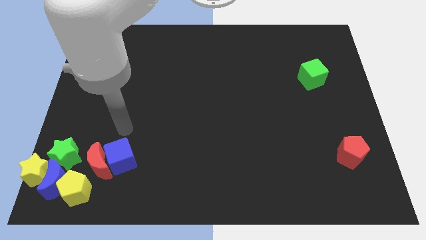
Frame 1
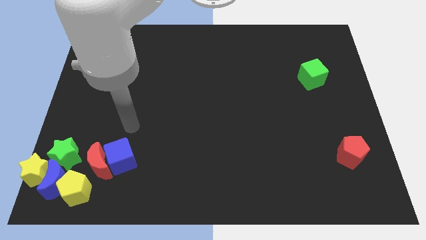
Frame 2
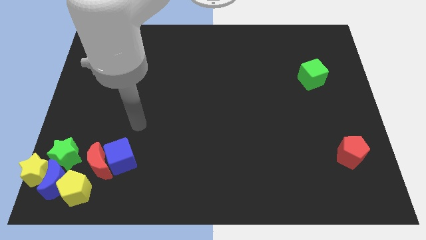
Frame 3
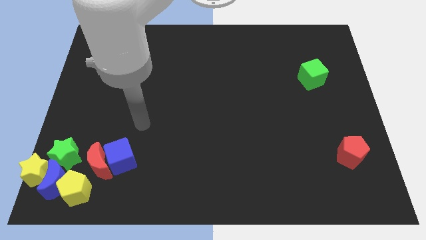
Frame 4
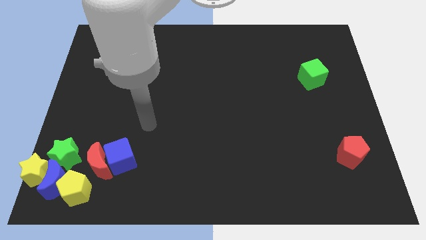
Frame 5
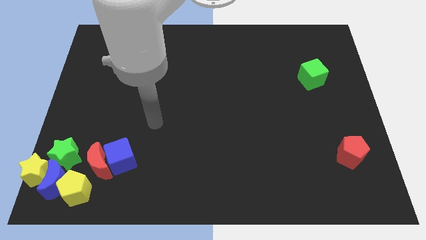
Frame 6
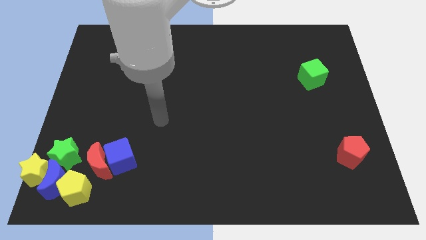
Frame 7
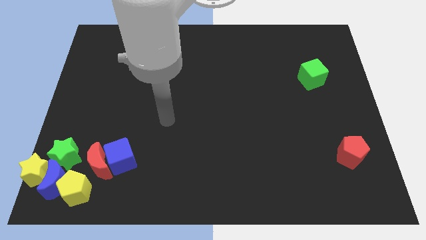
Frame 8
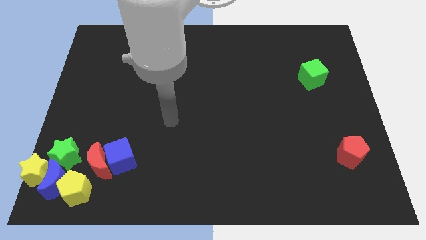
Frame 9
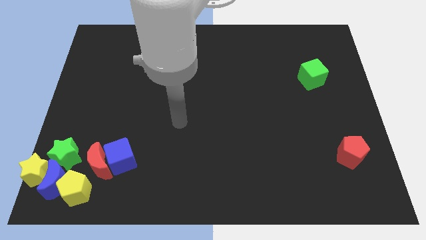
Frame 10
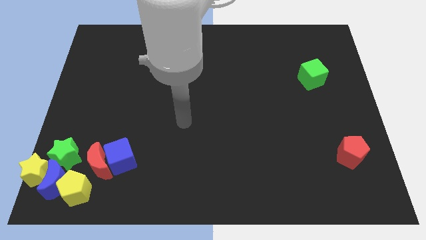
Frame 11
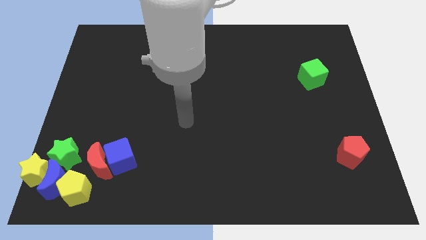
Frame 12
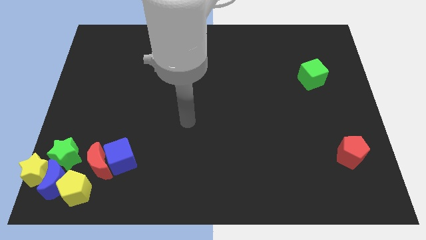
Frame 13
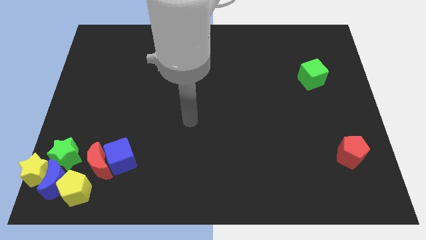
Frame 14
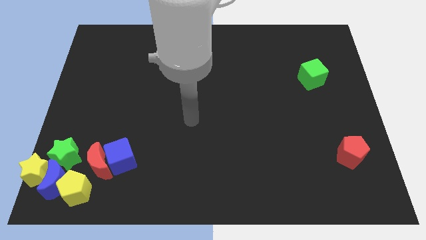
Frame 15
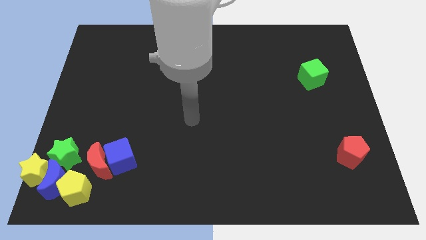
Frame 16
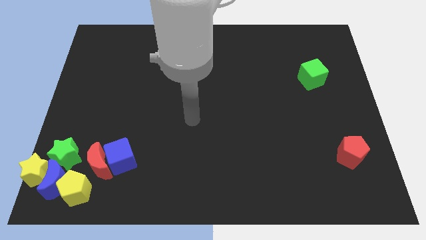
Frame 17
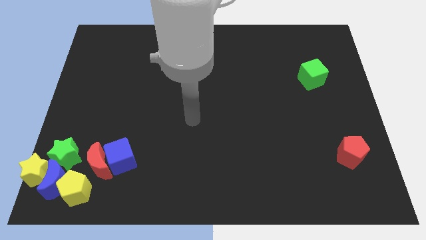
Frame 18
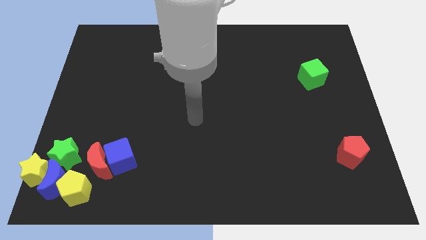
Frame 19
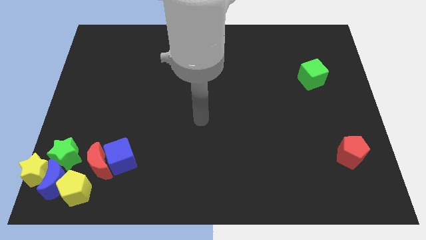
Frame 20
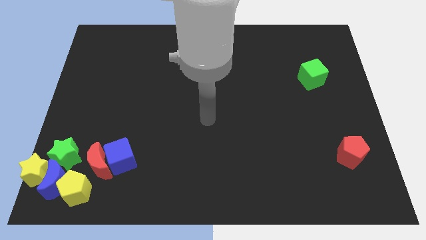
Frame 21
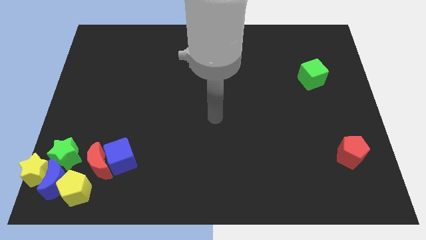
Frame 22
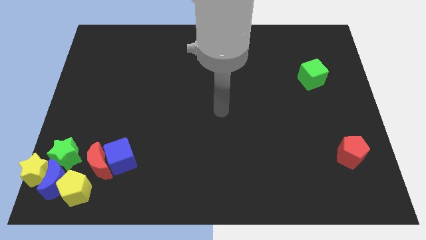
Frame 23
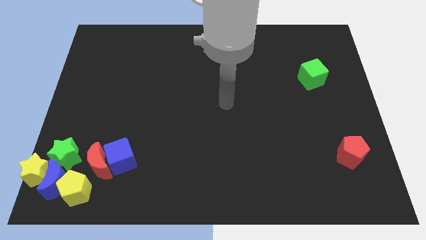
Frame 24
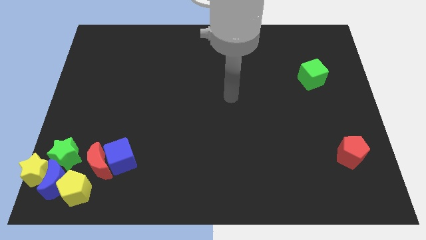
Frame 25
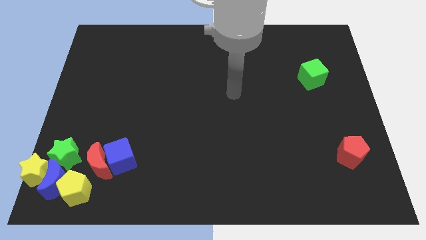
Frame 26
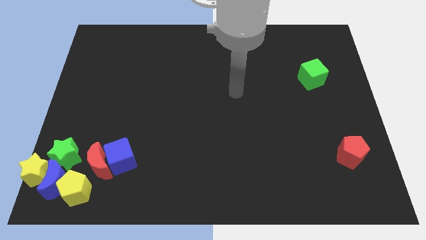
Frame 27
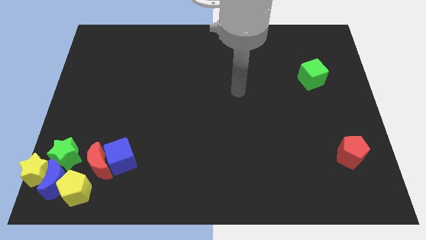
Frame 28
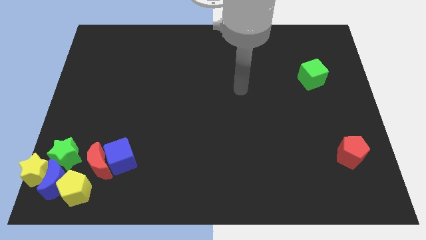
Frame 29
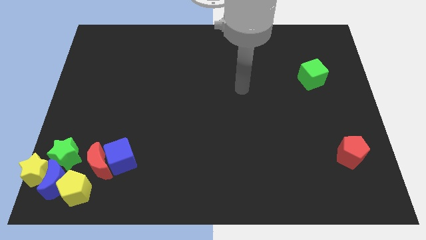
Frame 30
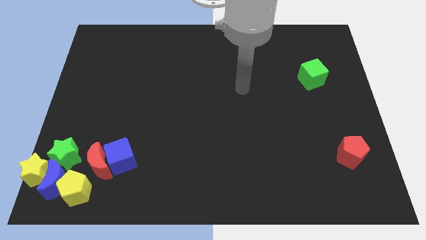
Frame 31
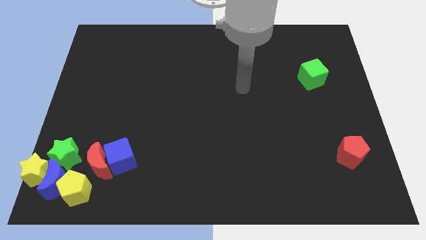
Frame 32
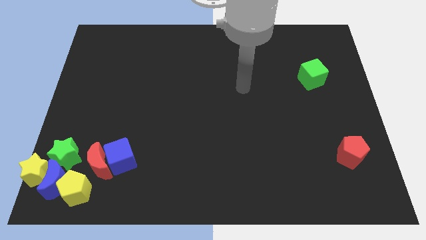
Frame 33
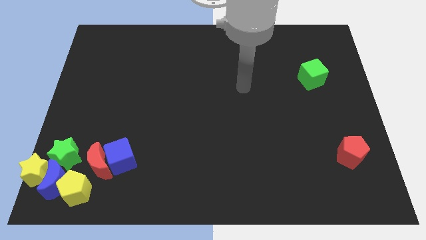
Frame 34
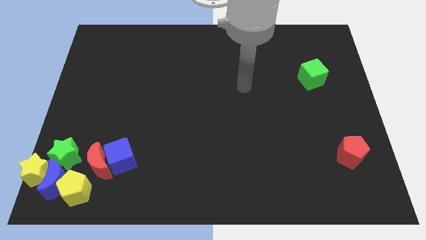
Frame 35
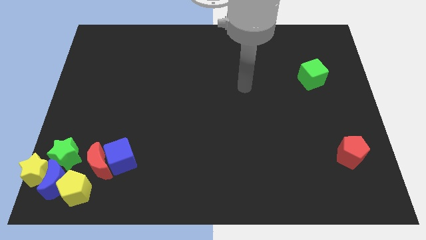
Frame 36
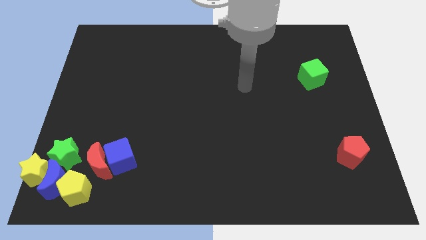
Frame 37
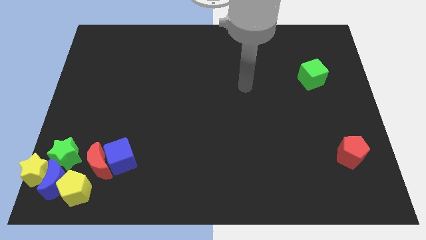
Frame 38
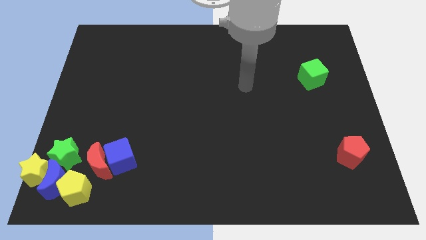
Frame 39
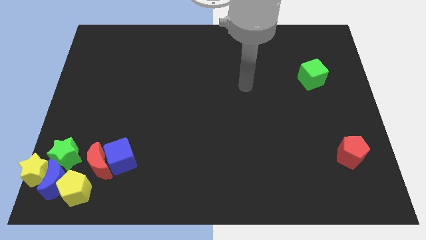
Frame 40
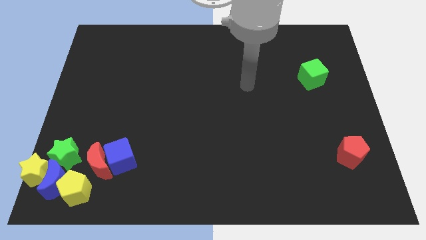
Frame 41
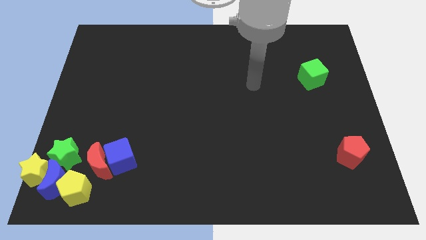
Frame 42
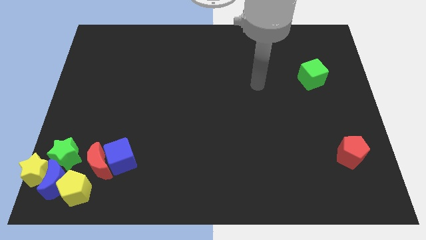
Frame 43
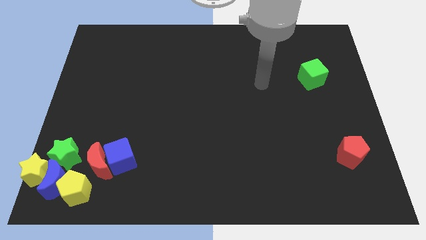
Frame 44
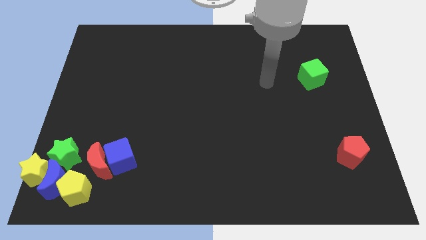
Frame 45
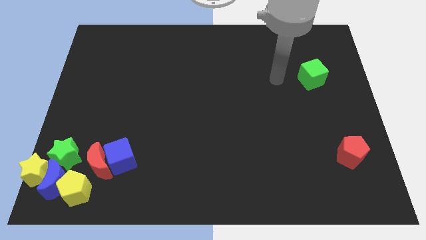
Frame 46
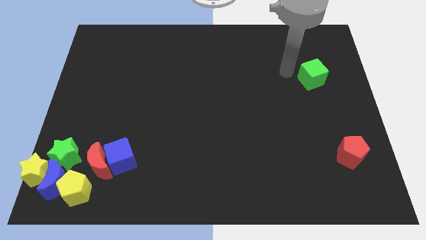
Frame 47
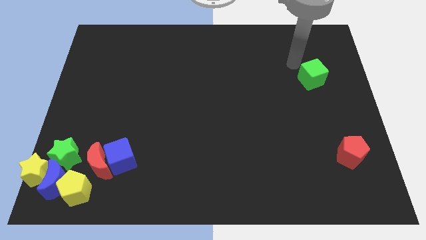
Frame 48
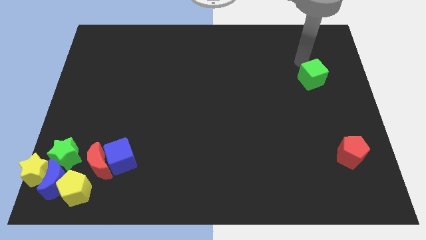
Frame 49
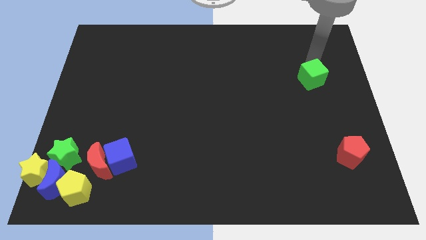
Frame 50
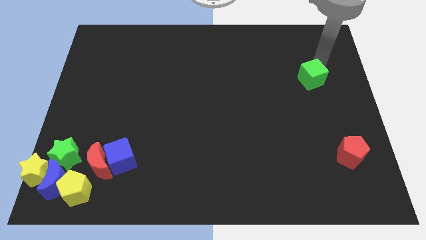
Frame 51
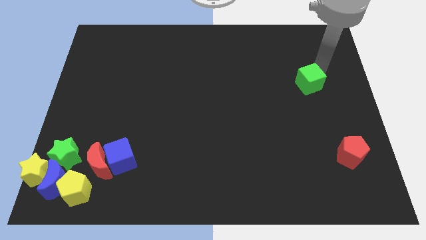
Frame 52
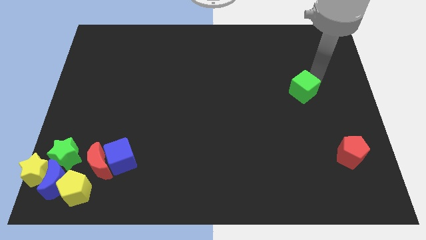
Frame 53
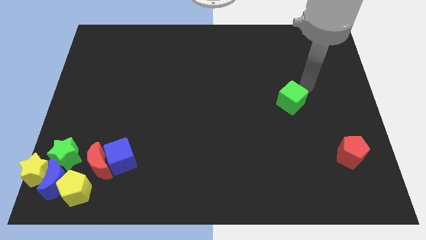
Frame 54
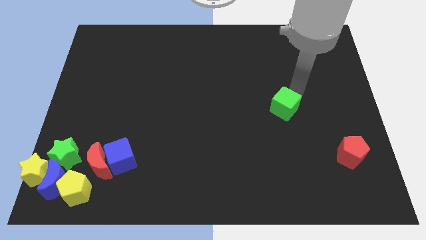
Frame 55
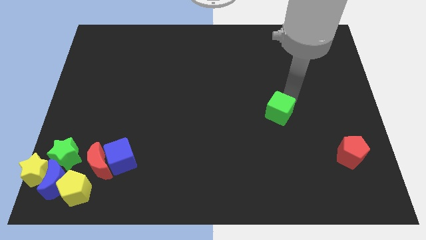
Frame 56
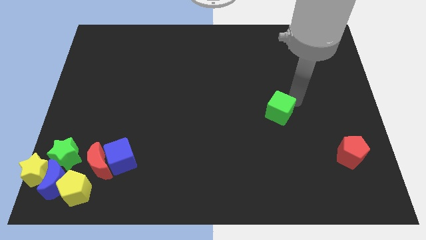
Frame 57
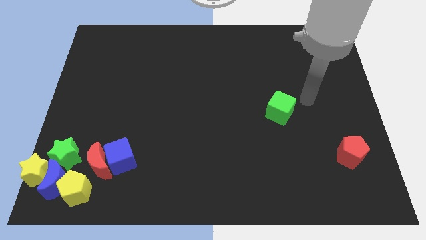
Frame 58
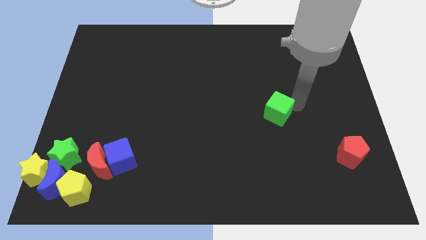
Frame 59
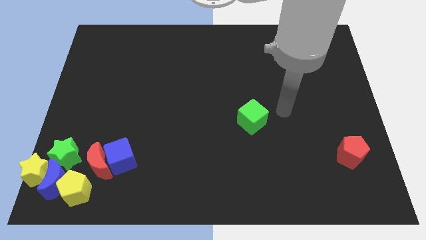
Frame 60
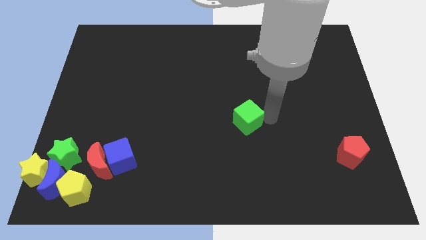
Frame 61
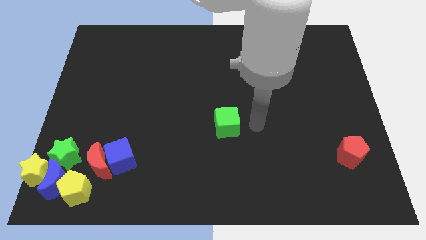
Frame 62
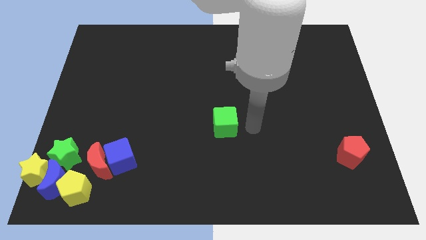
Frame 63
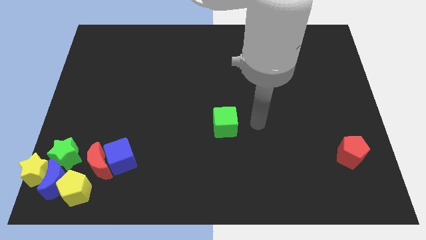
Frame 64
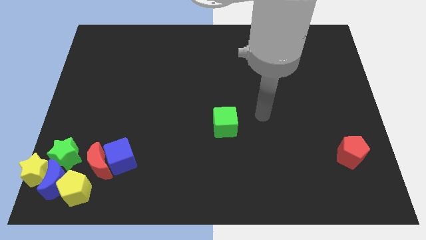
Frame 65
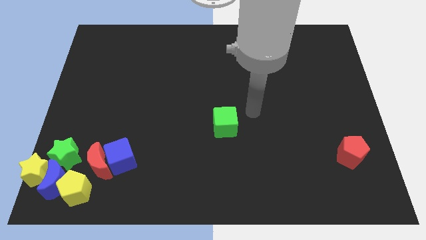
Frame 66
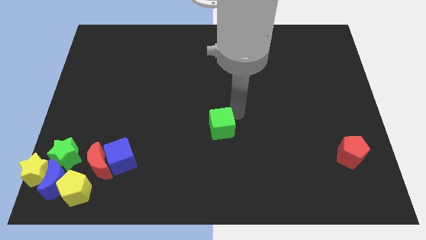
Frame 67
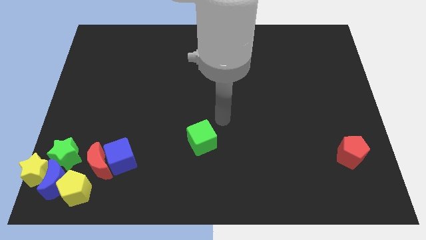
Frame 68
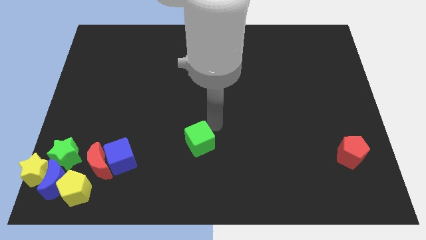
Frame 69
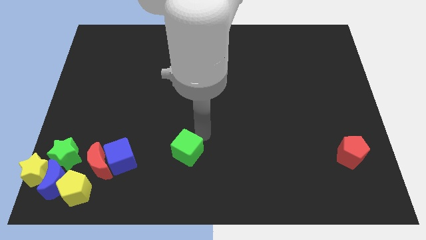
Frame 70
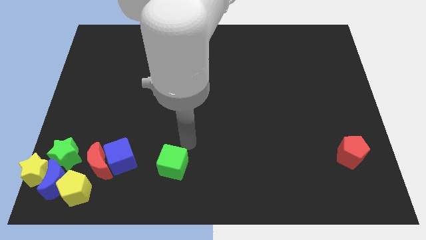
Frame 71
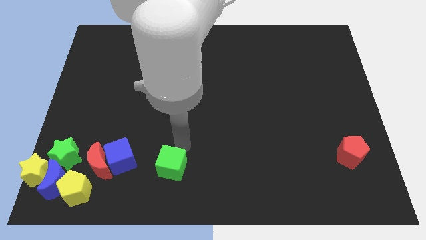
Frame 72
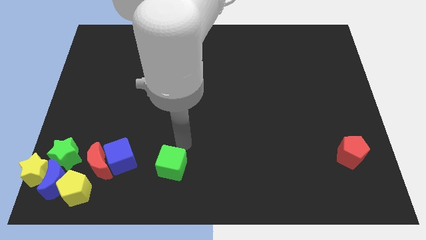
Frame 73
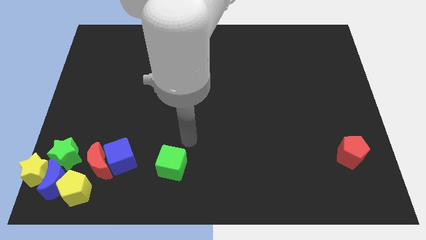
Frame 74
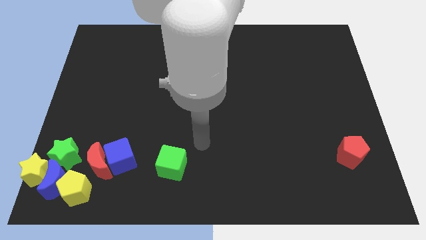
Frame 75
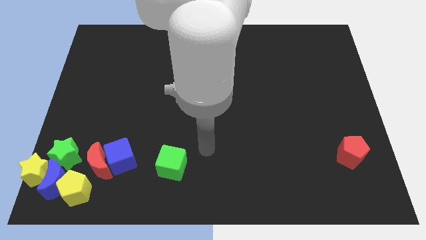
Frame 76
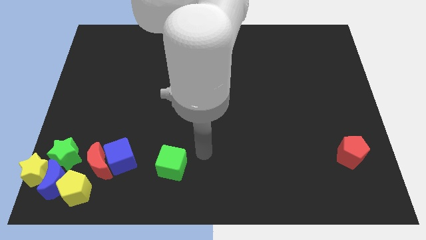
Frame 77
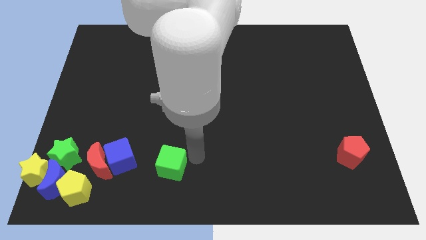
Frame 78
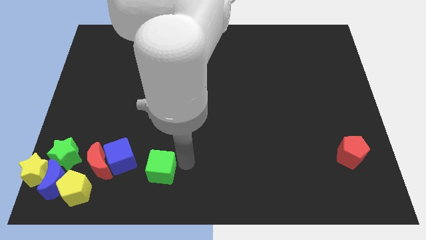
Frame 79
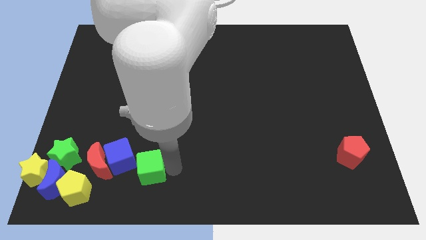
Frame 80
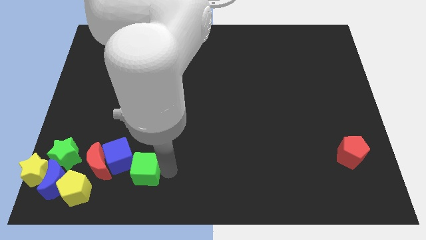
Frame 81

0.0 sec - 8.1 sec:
move the green cube to the left bottom

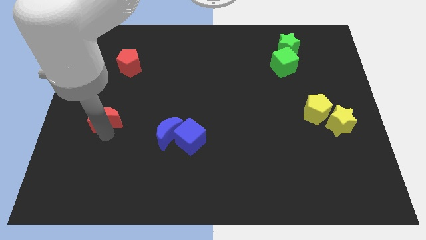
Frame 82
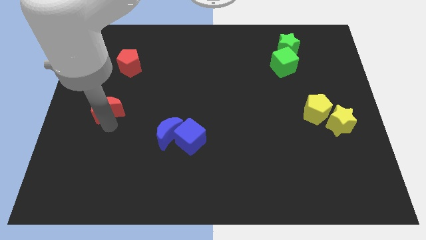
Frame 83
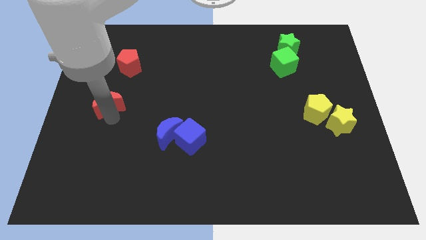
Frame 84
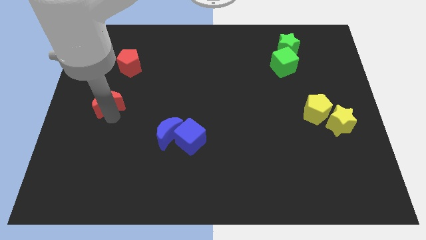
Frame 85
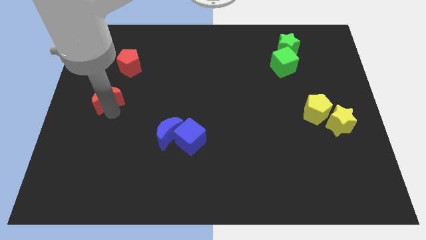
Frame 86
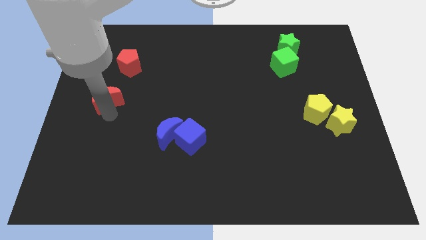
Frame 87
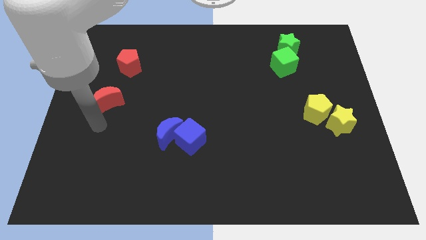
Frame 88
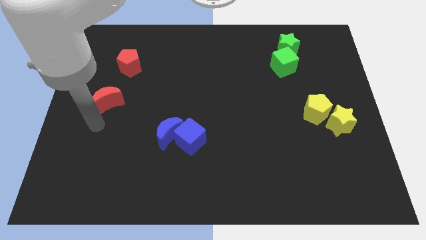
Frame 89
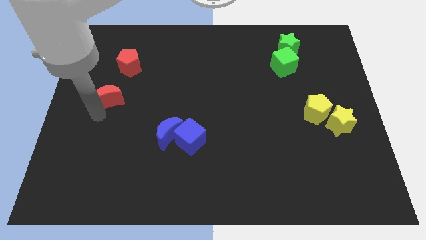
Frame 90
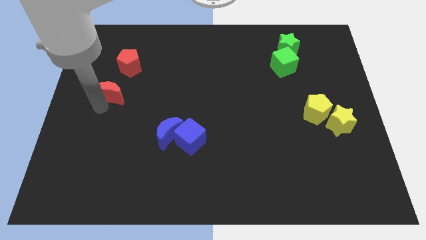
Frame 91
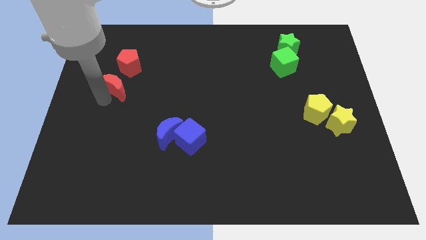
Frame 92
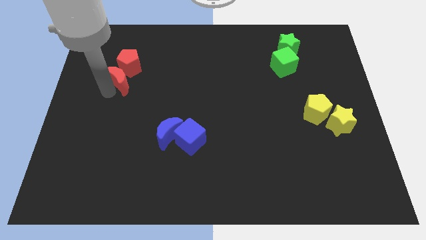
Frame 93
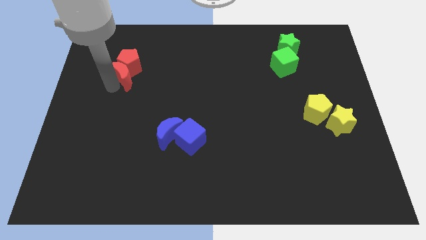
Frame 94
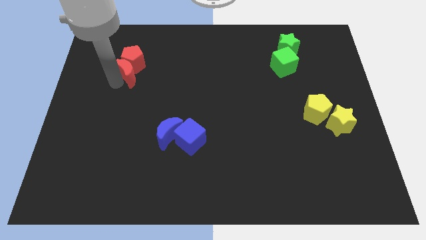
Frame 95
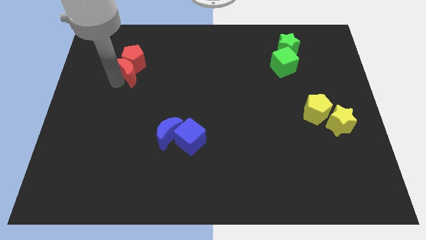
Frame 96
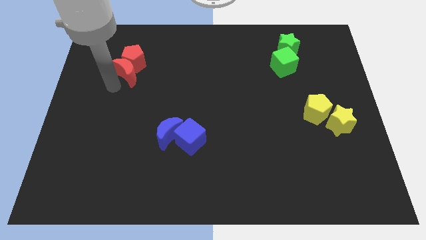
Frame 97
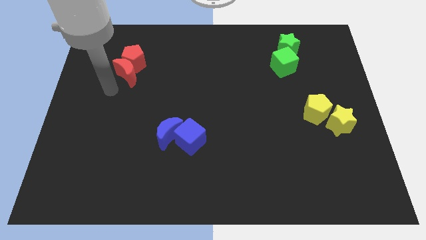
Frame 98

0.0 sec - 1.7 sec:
move the red moon into the red pentagon
